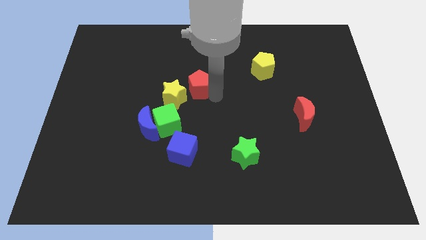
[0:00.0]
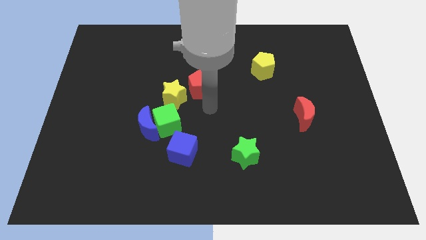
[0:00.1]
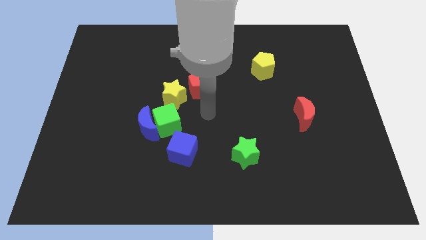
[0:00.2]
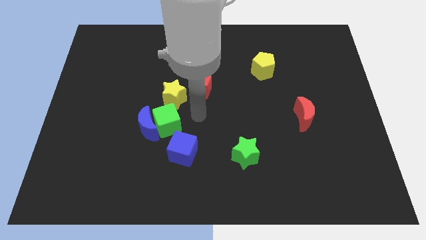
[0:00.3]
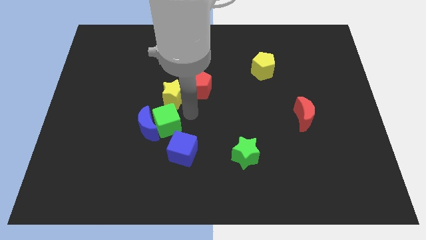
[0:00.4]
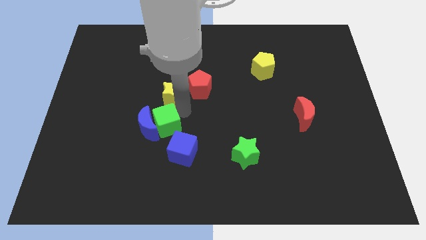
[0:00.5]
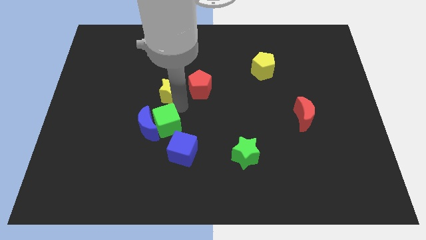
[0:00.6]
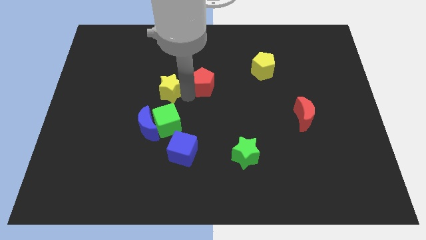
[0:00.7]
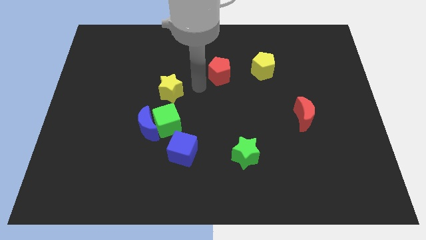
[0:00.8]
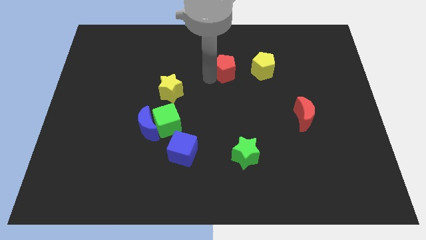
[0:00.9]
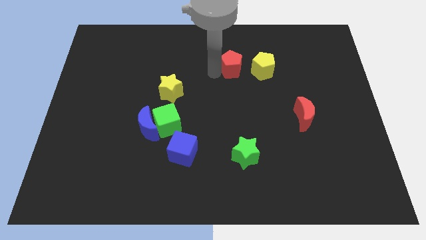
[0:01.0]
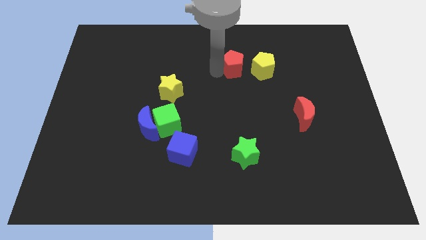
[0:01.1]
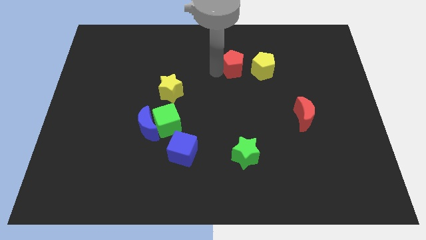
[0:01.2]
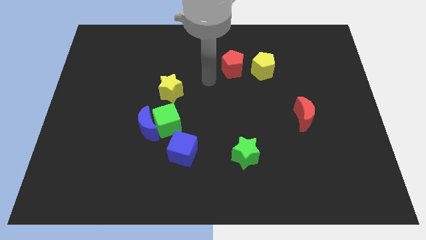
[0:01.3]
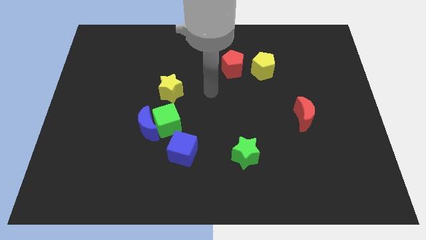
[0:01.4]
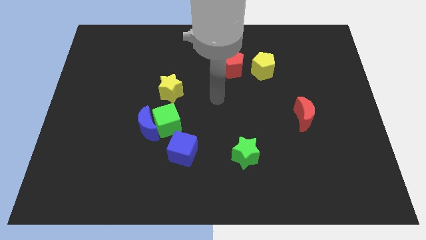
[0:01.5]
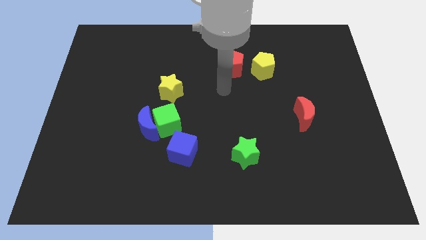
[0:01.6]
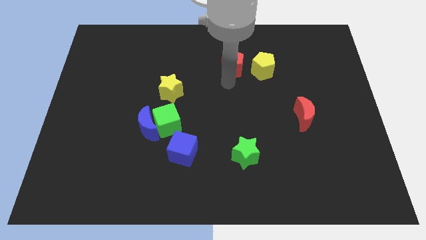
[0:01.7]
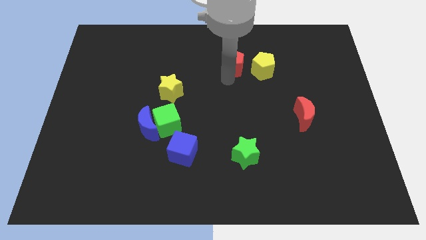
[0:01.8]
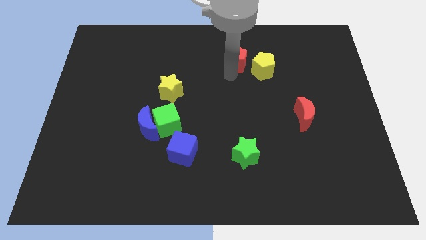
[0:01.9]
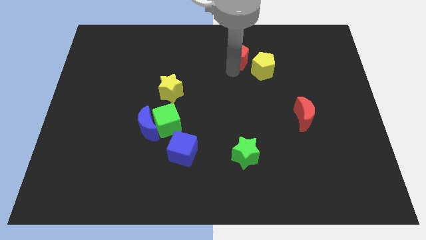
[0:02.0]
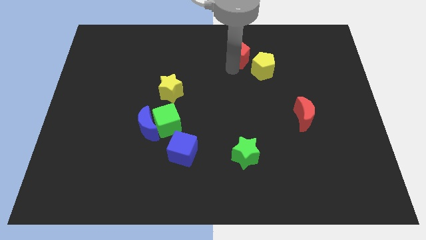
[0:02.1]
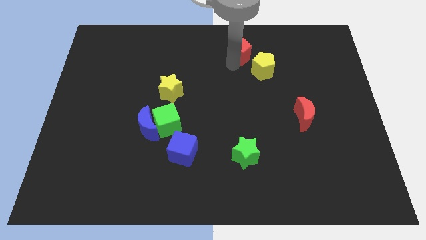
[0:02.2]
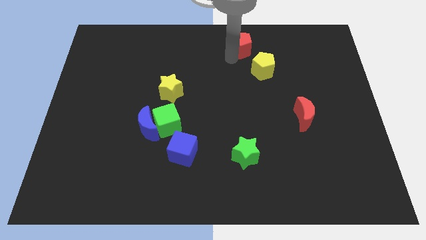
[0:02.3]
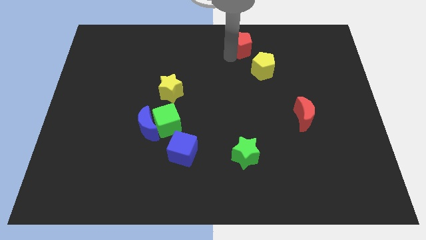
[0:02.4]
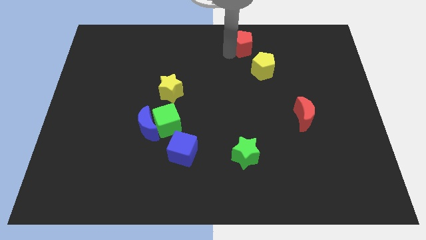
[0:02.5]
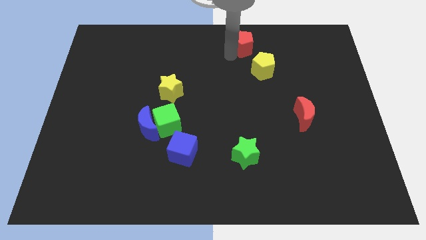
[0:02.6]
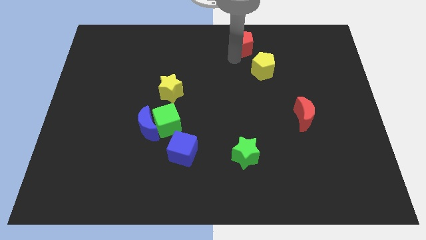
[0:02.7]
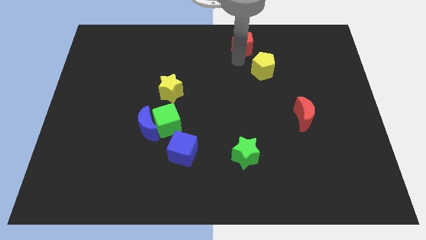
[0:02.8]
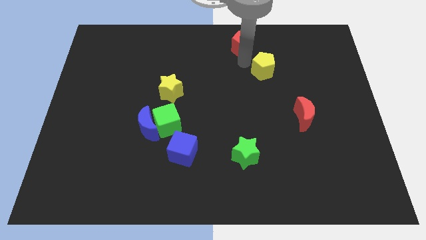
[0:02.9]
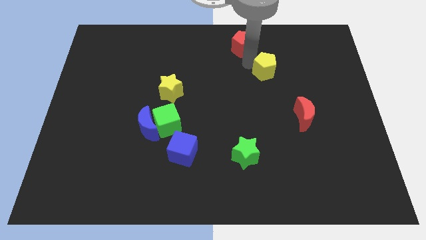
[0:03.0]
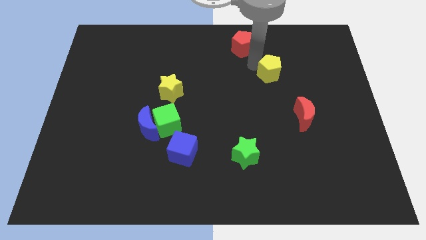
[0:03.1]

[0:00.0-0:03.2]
push the red pentagon to the top center

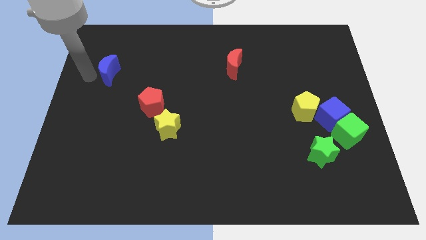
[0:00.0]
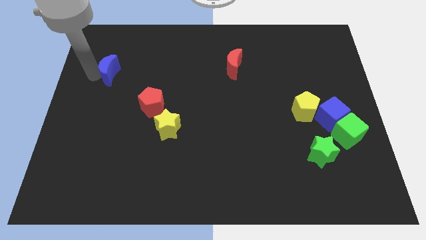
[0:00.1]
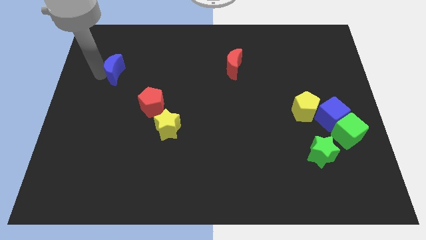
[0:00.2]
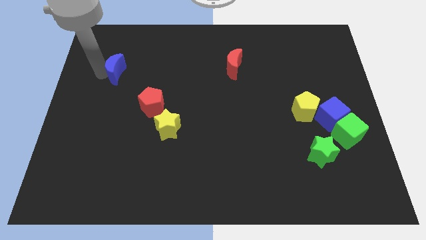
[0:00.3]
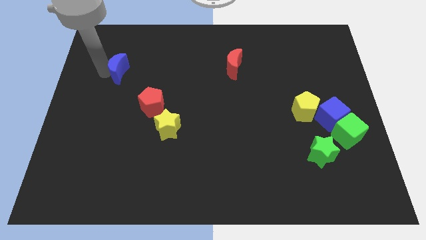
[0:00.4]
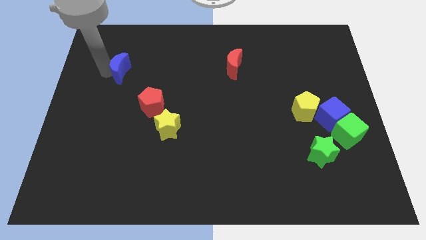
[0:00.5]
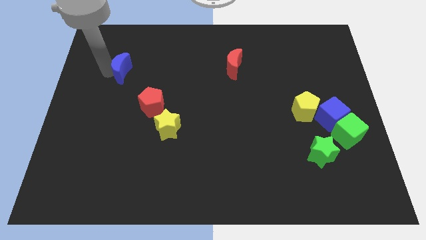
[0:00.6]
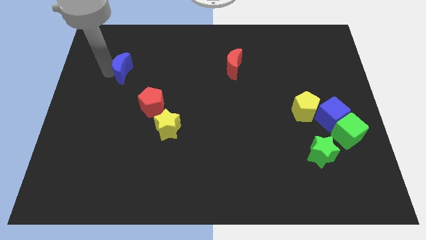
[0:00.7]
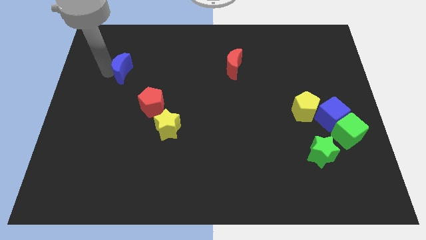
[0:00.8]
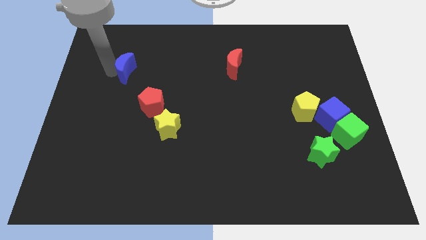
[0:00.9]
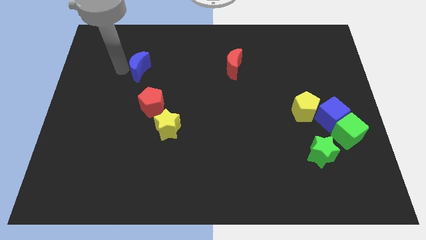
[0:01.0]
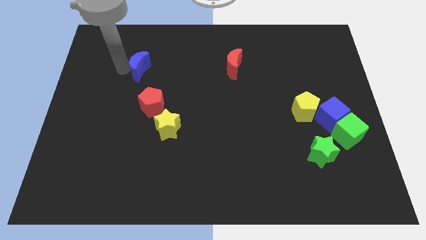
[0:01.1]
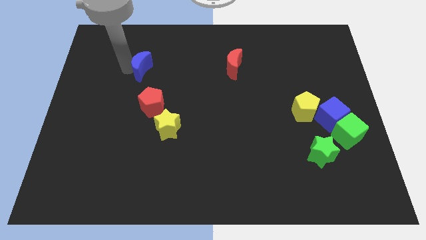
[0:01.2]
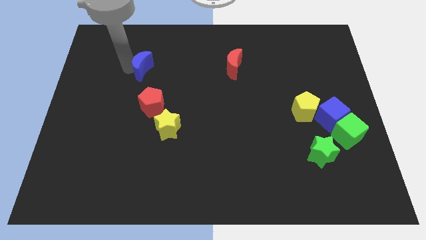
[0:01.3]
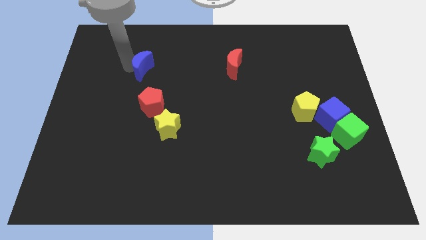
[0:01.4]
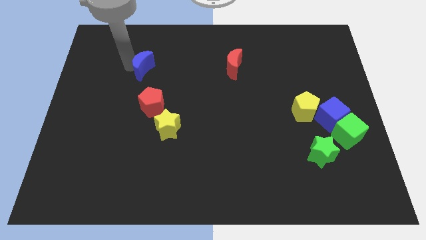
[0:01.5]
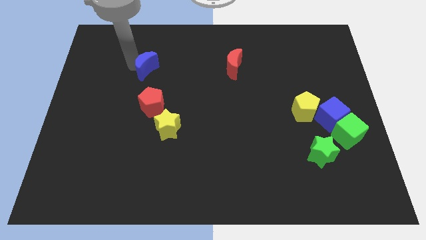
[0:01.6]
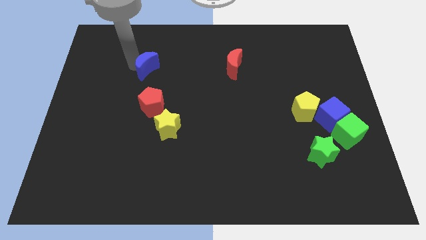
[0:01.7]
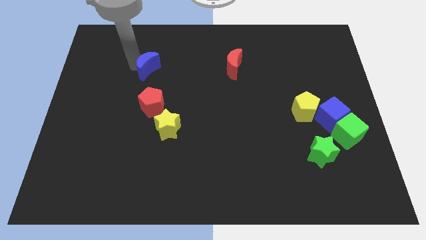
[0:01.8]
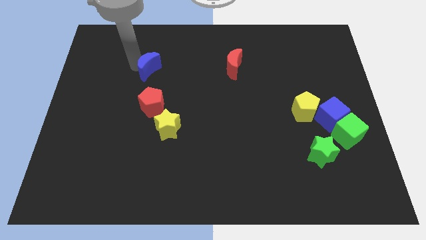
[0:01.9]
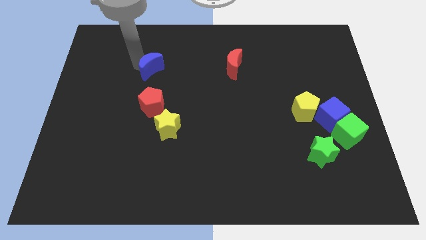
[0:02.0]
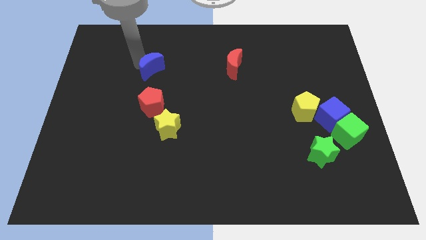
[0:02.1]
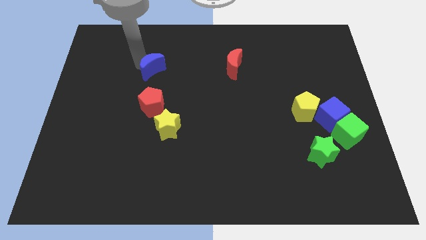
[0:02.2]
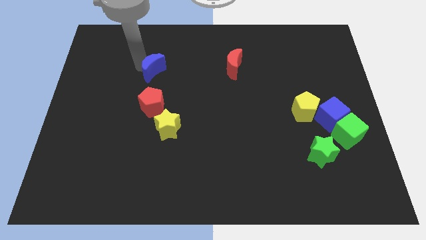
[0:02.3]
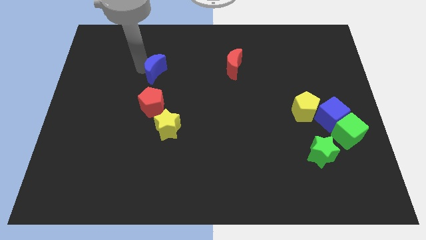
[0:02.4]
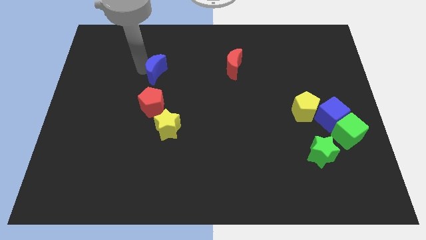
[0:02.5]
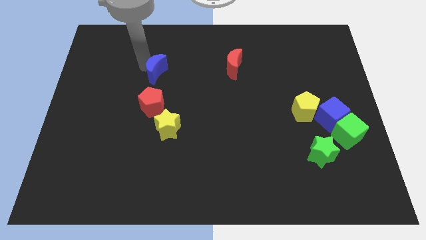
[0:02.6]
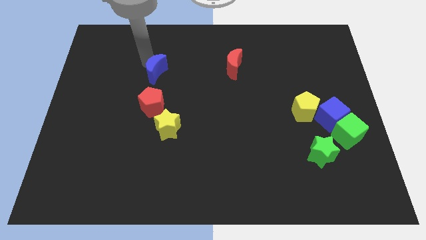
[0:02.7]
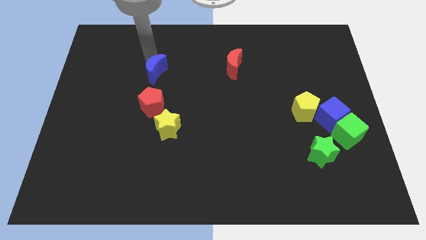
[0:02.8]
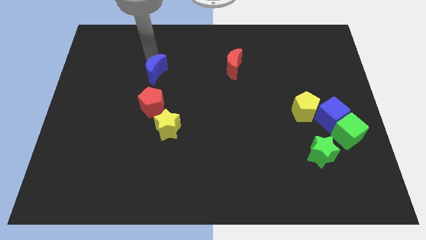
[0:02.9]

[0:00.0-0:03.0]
move the blue crescent to the top of the red pentagon

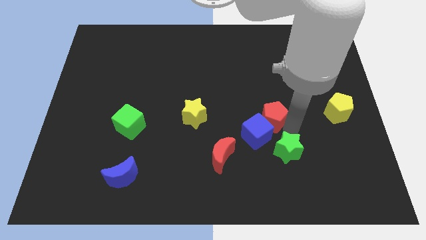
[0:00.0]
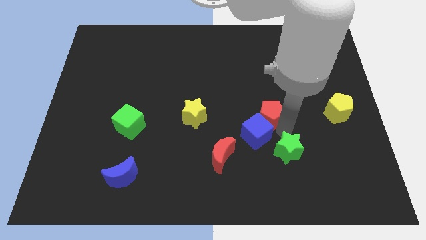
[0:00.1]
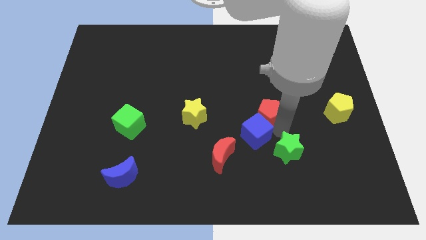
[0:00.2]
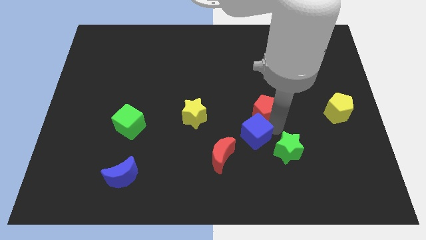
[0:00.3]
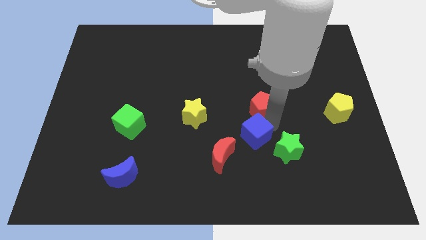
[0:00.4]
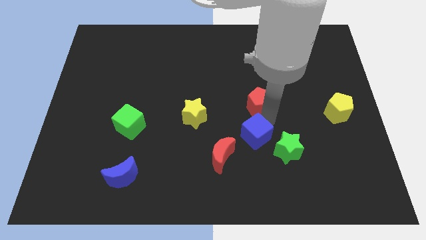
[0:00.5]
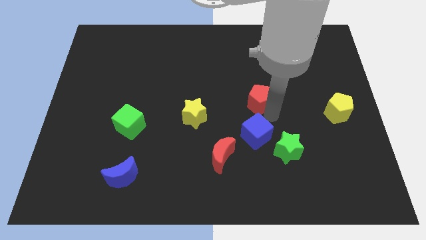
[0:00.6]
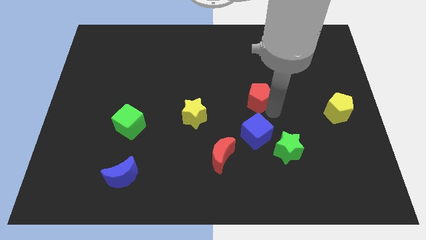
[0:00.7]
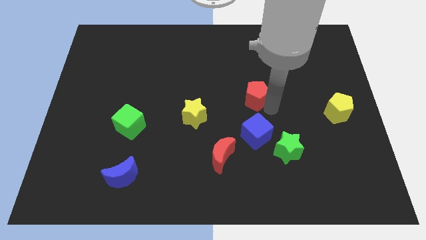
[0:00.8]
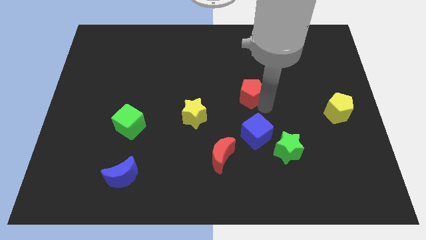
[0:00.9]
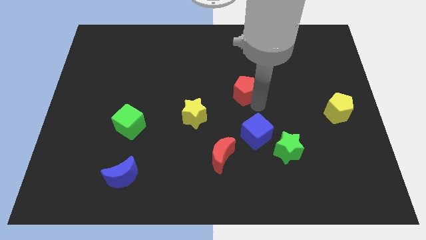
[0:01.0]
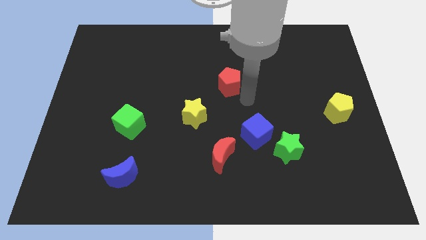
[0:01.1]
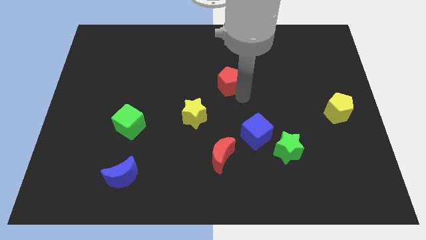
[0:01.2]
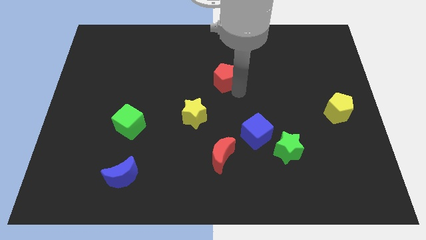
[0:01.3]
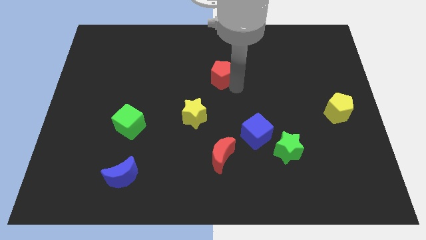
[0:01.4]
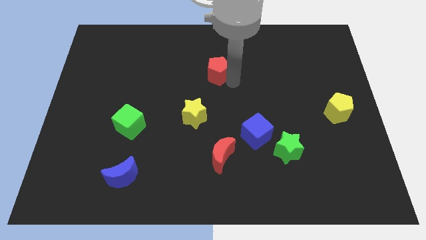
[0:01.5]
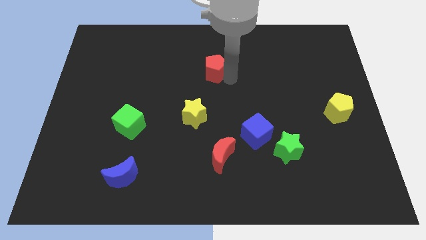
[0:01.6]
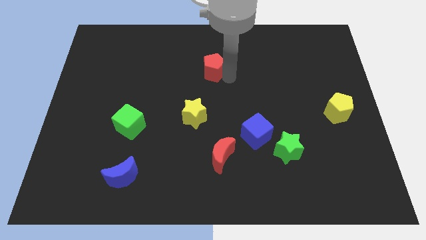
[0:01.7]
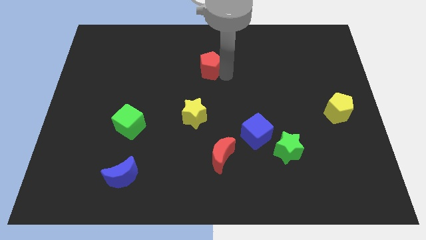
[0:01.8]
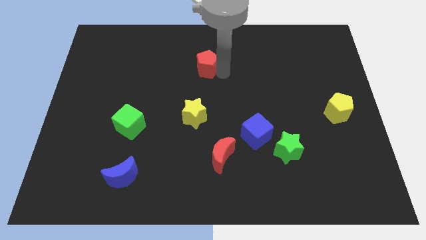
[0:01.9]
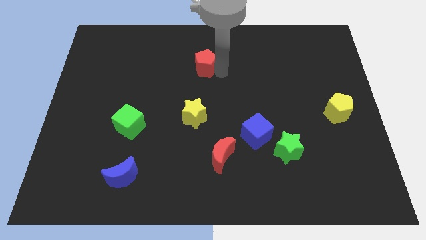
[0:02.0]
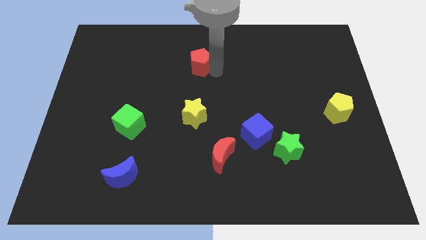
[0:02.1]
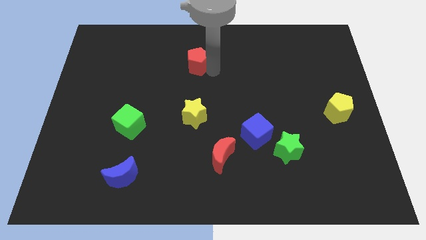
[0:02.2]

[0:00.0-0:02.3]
place red pentagon above yellow star

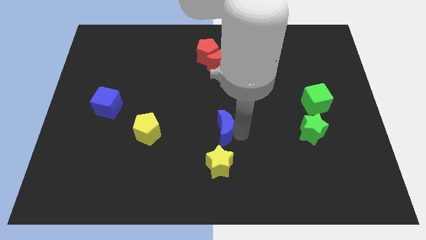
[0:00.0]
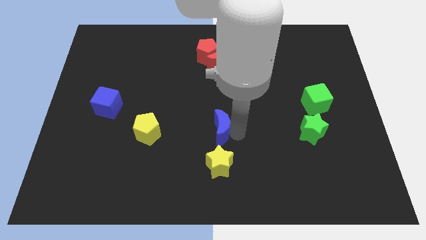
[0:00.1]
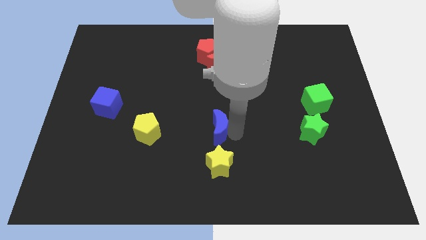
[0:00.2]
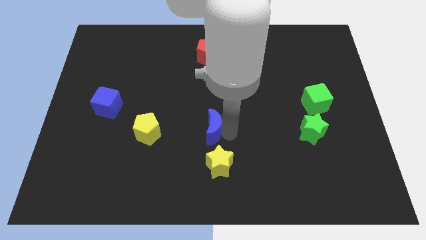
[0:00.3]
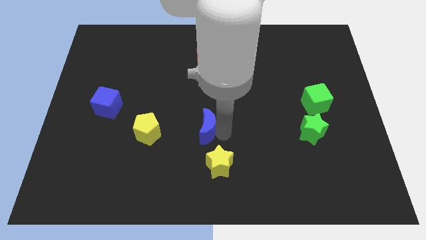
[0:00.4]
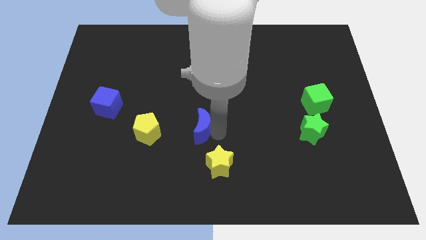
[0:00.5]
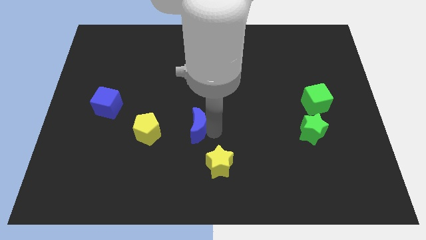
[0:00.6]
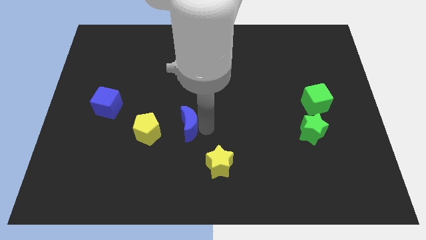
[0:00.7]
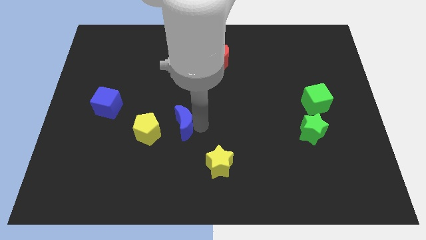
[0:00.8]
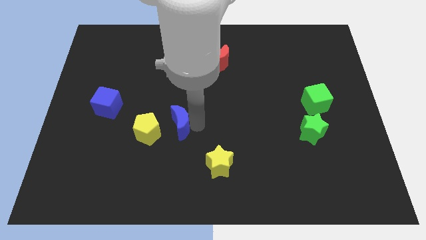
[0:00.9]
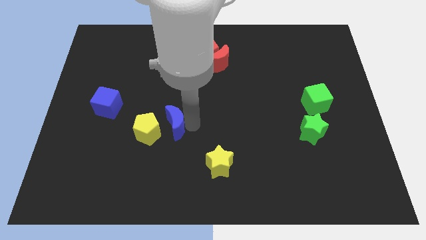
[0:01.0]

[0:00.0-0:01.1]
push the blue crescent slightly to the left
